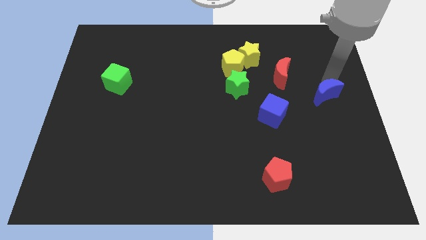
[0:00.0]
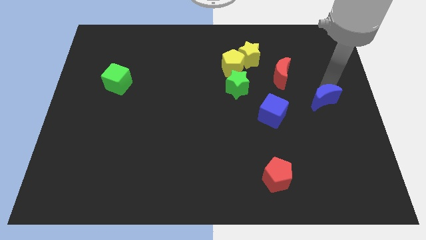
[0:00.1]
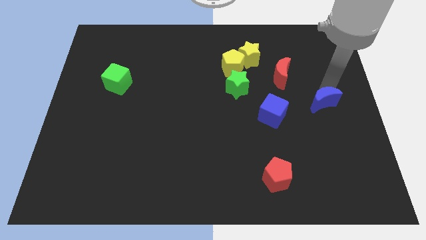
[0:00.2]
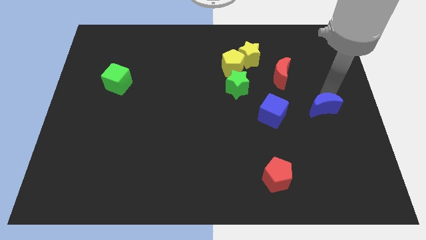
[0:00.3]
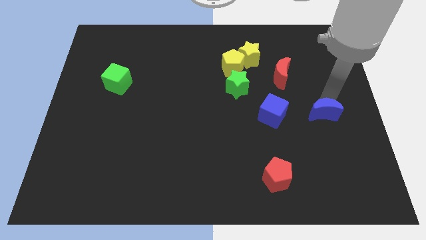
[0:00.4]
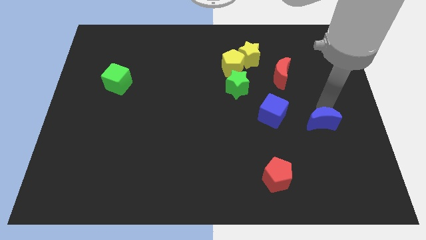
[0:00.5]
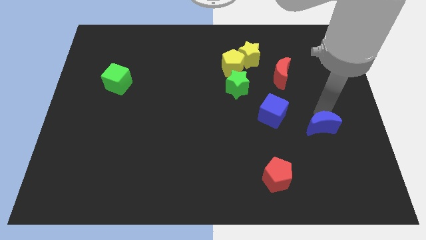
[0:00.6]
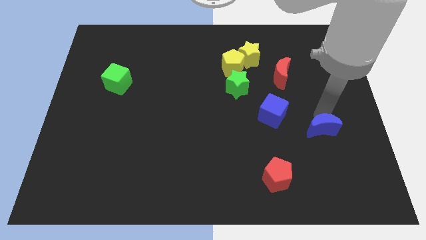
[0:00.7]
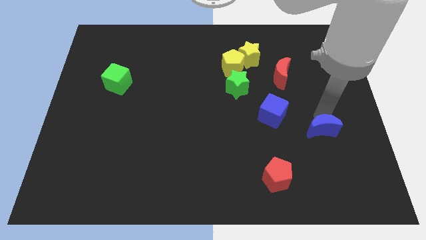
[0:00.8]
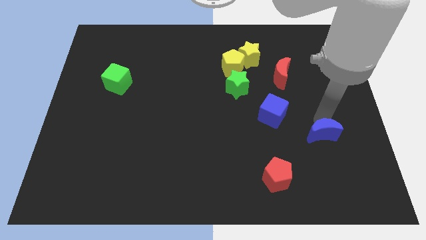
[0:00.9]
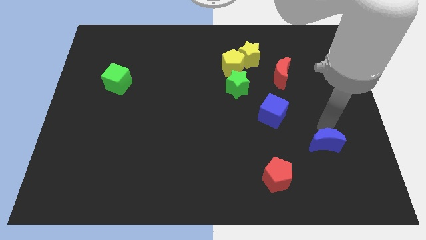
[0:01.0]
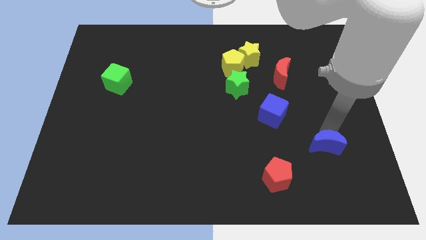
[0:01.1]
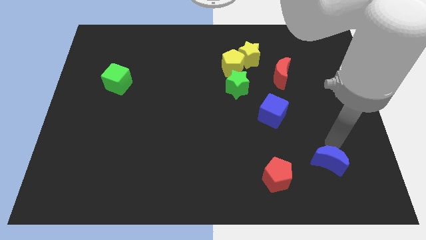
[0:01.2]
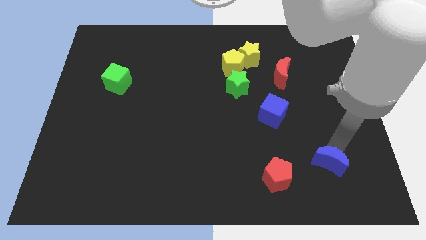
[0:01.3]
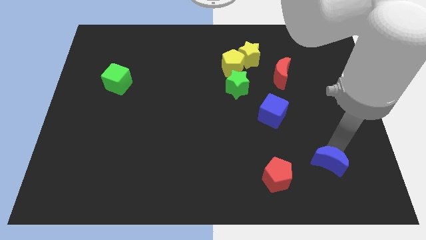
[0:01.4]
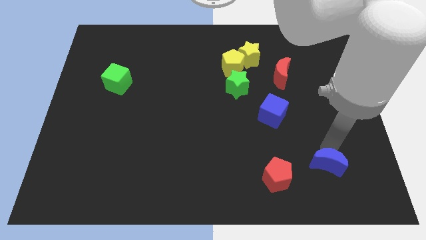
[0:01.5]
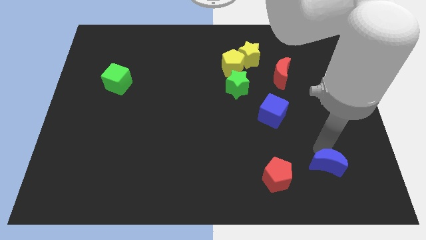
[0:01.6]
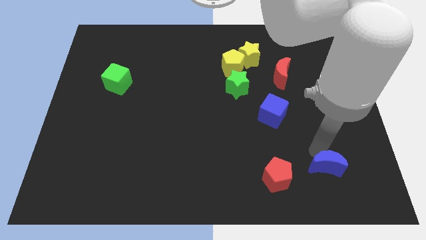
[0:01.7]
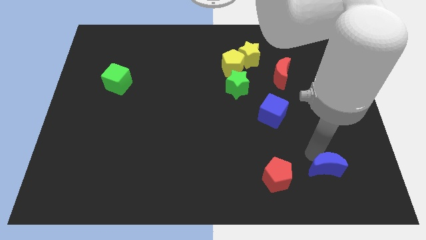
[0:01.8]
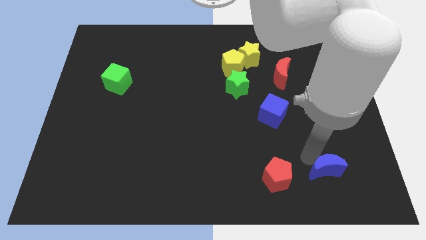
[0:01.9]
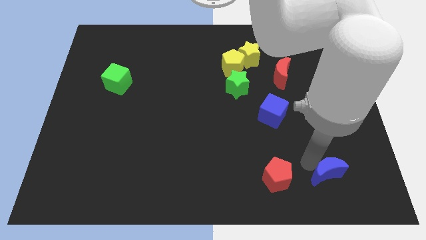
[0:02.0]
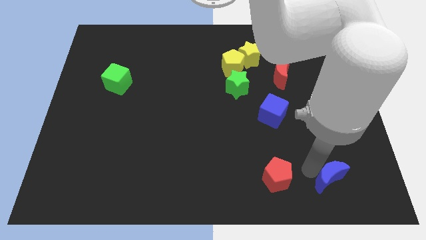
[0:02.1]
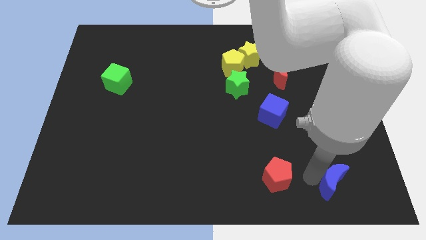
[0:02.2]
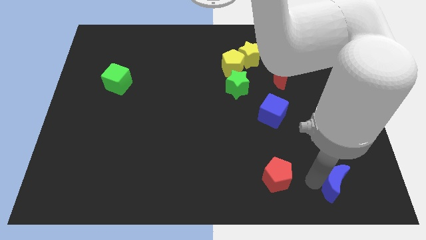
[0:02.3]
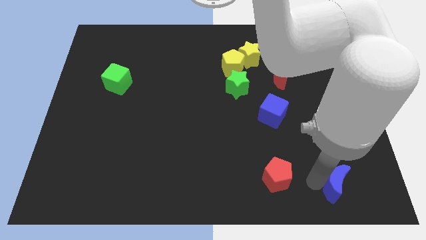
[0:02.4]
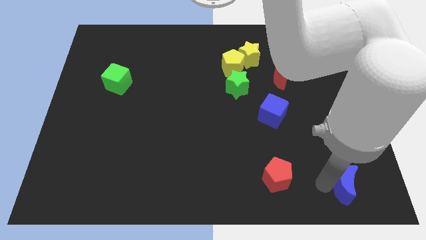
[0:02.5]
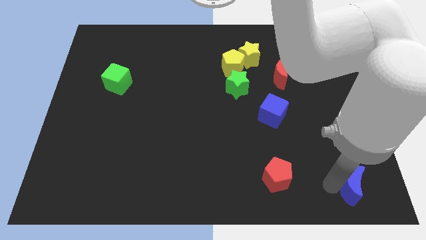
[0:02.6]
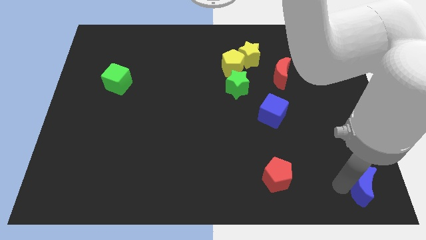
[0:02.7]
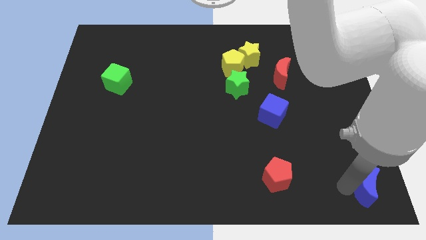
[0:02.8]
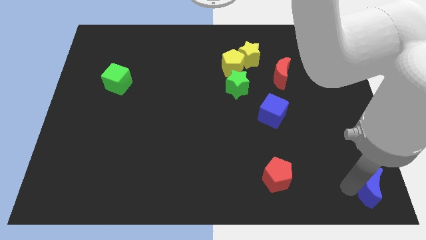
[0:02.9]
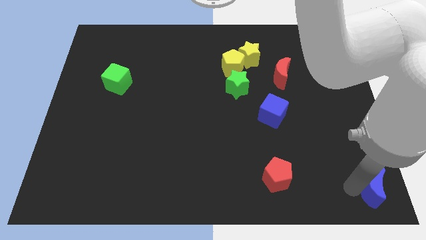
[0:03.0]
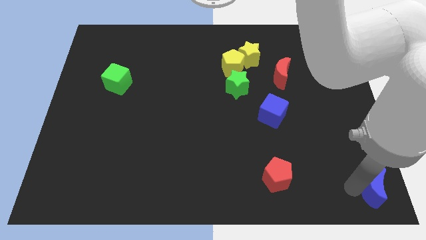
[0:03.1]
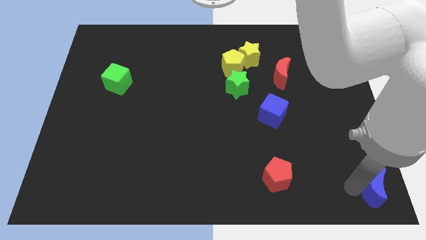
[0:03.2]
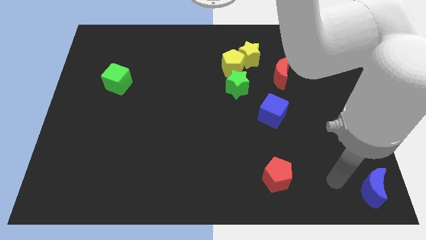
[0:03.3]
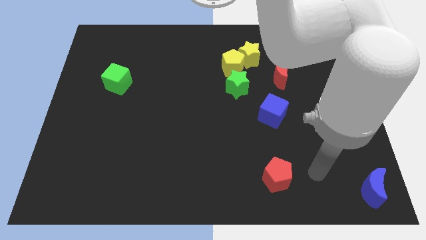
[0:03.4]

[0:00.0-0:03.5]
place blue crescent towards bottom right corner

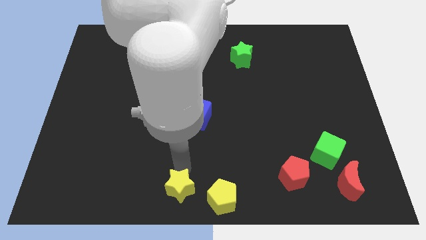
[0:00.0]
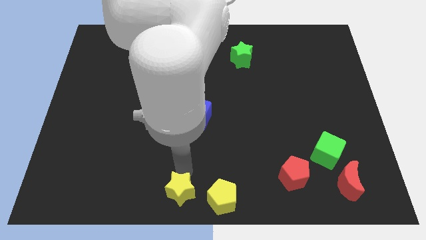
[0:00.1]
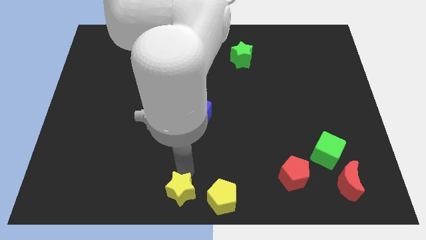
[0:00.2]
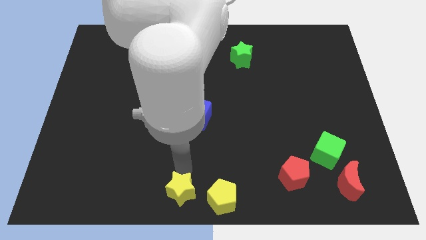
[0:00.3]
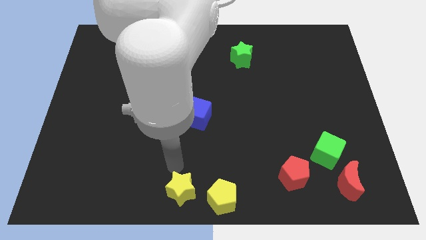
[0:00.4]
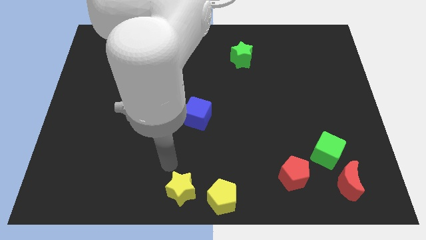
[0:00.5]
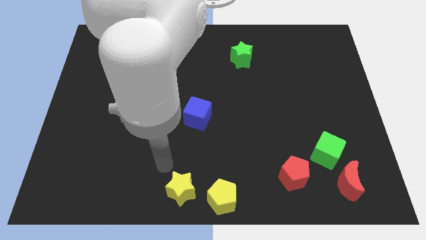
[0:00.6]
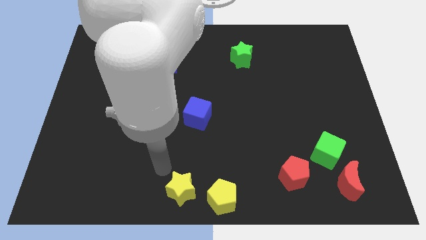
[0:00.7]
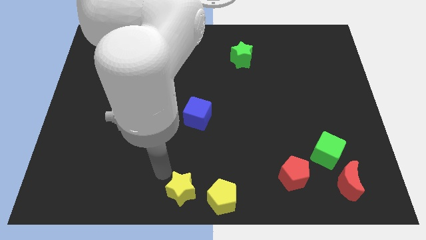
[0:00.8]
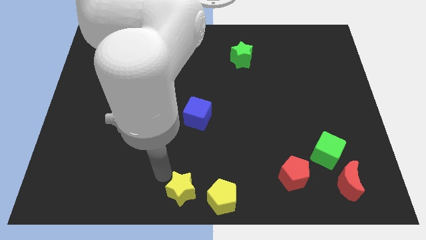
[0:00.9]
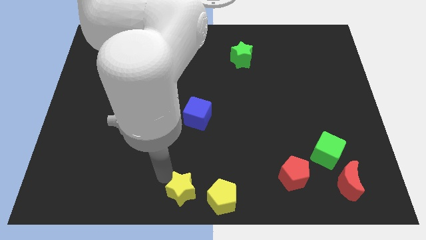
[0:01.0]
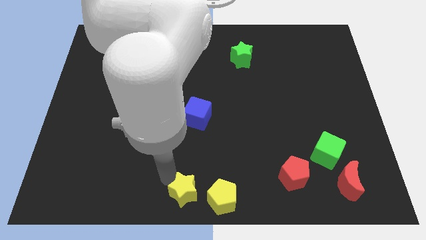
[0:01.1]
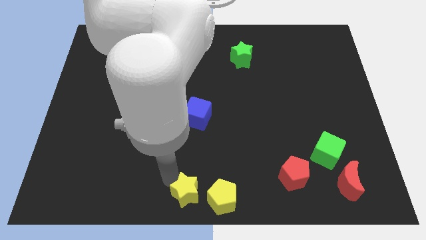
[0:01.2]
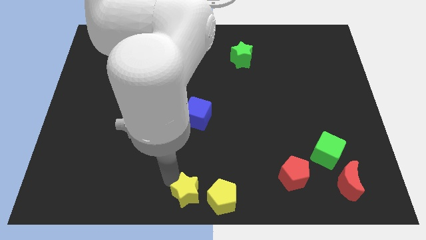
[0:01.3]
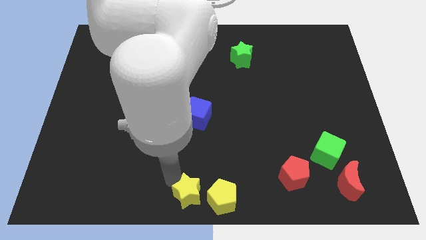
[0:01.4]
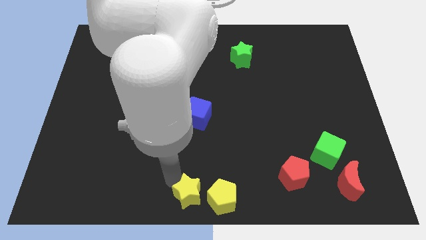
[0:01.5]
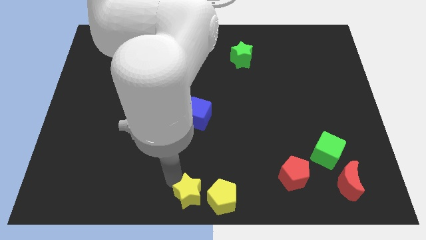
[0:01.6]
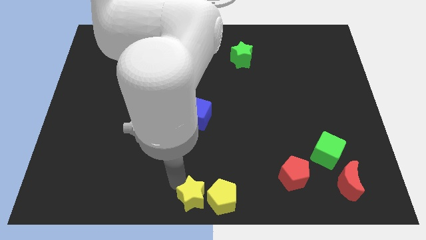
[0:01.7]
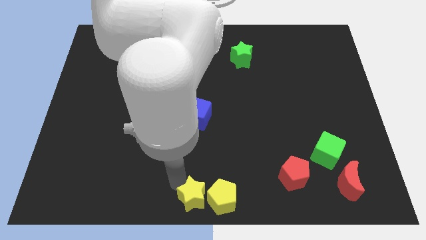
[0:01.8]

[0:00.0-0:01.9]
move the yellow star at the bottom center

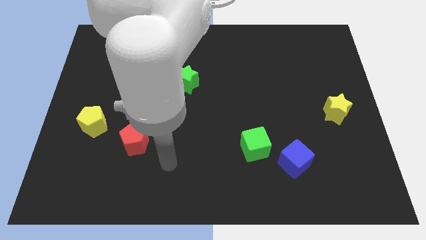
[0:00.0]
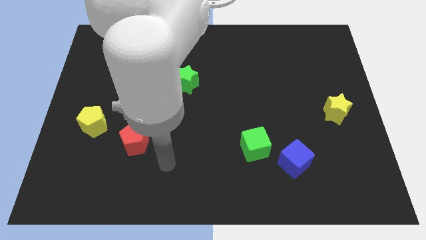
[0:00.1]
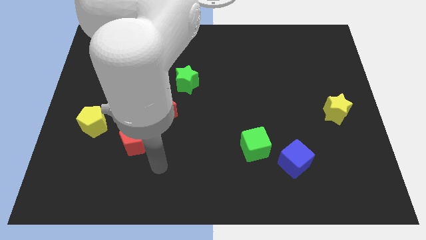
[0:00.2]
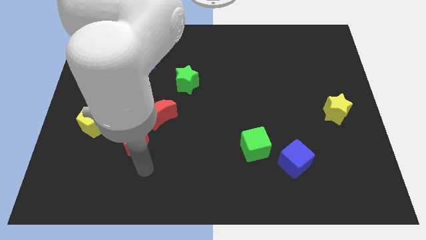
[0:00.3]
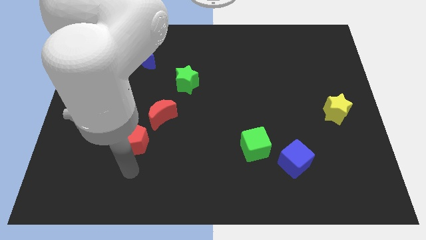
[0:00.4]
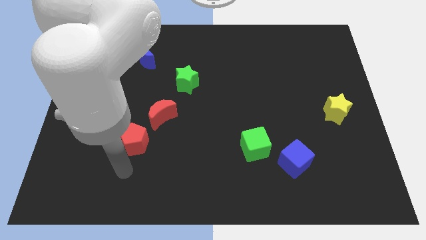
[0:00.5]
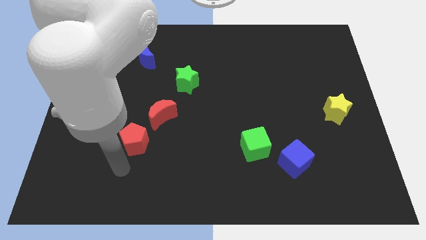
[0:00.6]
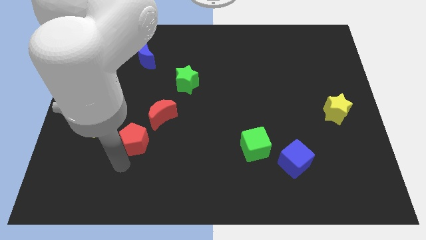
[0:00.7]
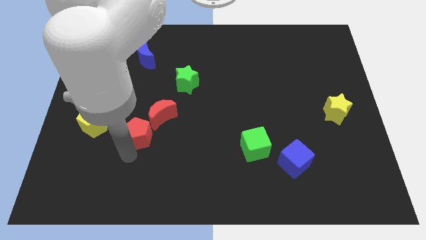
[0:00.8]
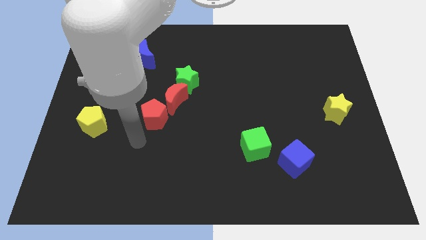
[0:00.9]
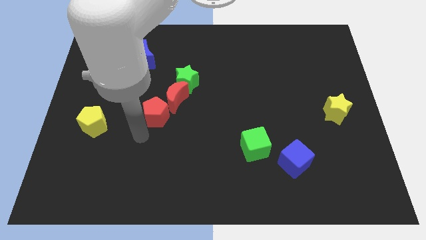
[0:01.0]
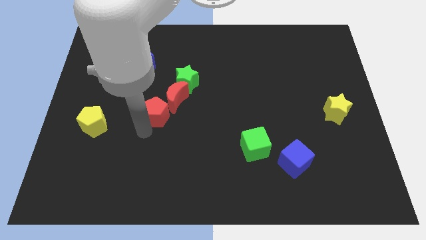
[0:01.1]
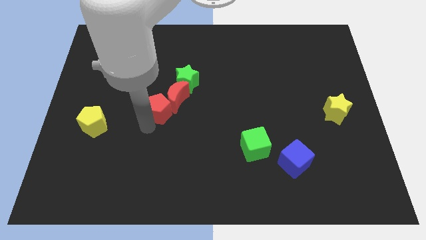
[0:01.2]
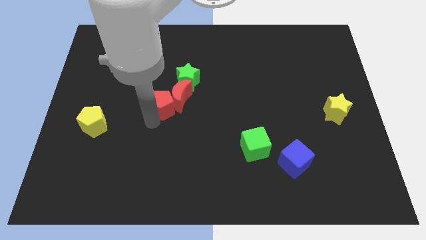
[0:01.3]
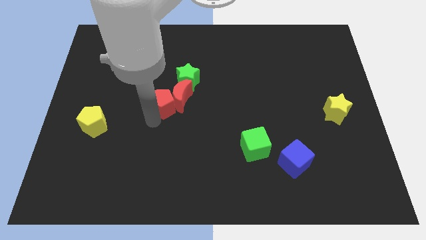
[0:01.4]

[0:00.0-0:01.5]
move the red pentagon into the red moon

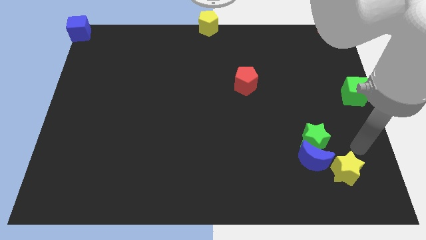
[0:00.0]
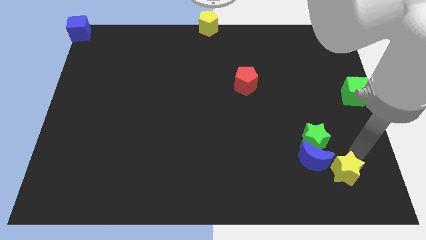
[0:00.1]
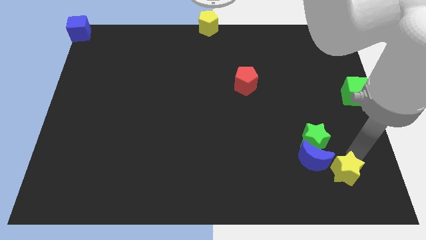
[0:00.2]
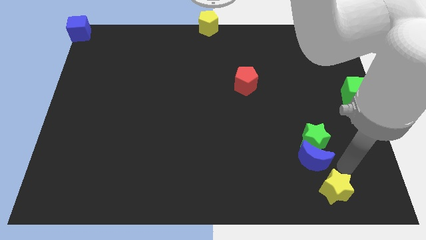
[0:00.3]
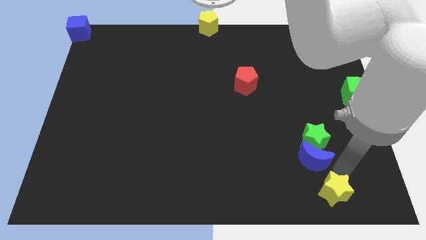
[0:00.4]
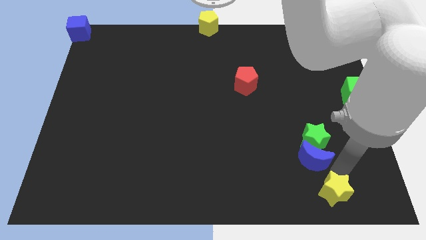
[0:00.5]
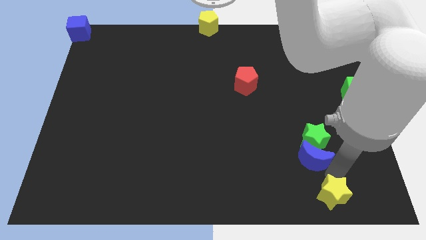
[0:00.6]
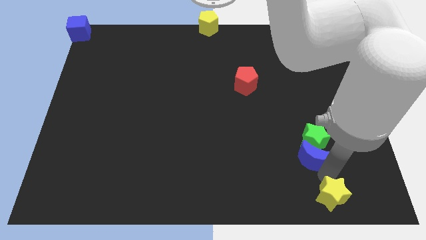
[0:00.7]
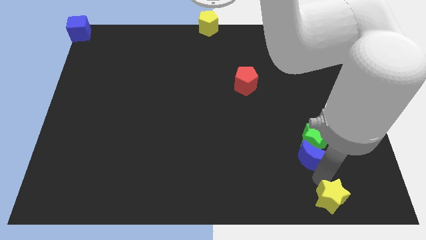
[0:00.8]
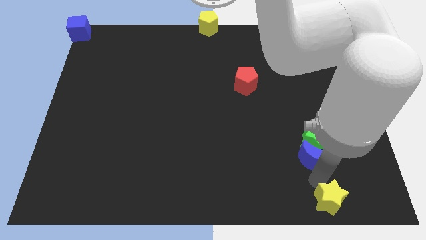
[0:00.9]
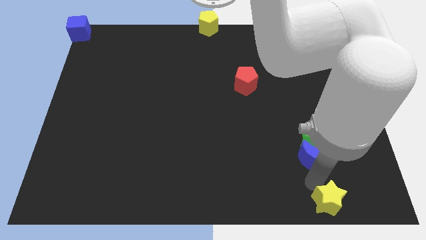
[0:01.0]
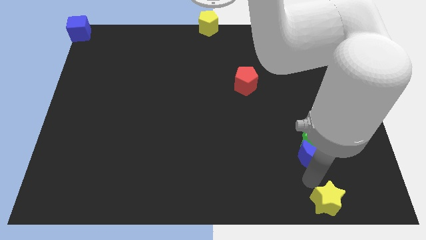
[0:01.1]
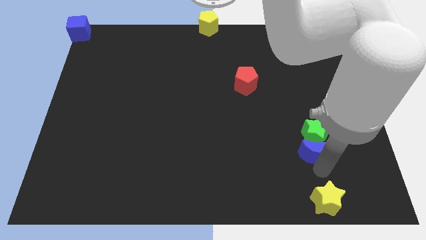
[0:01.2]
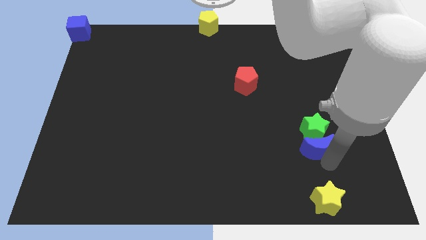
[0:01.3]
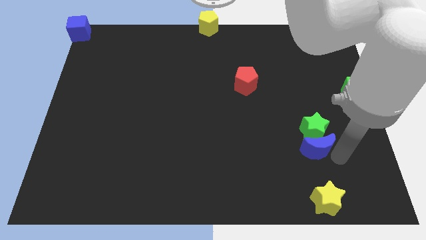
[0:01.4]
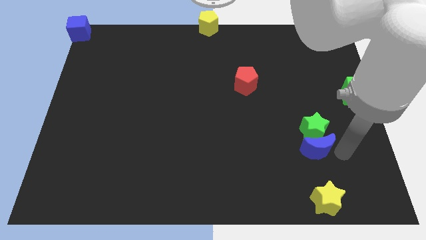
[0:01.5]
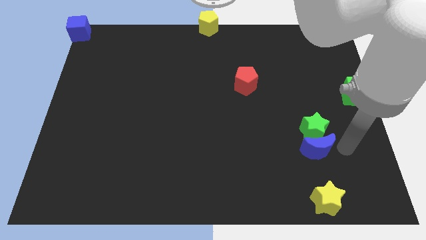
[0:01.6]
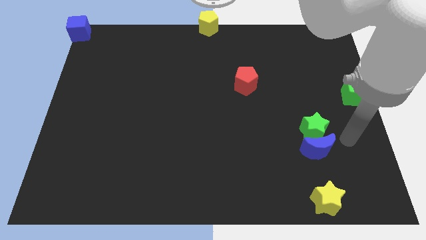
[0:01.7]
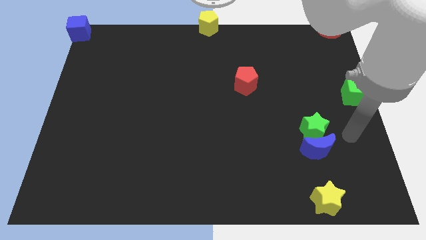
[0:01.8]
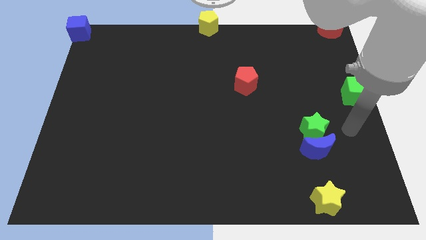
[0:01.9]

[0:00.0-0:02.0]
separate the yellow star and blue moon

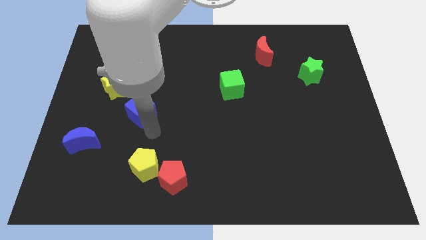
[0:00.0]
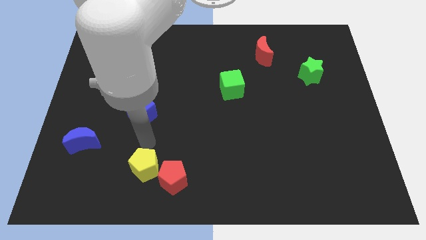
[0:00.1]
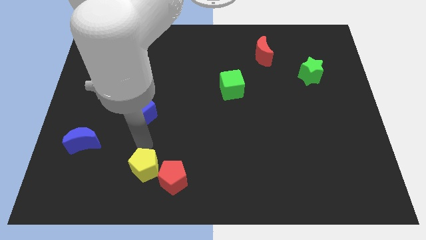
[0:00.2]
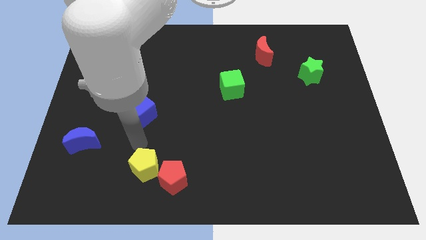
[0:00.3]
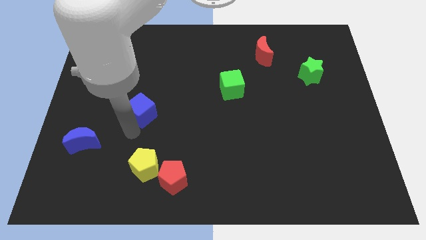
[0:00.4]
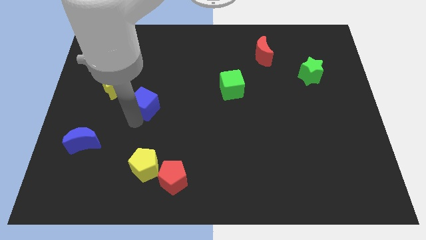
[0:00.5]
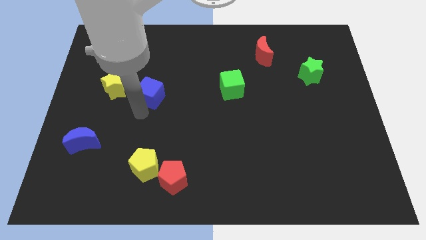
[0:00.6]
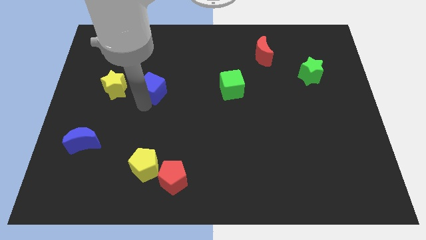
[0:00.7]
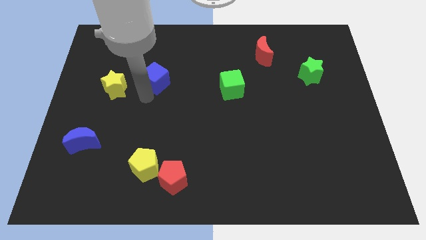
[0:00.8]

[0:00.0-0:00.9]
place the blue cube to the right side of yellow star
